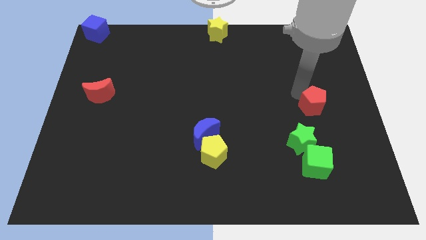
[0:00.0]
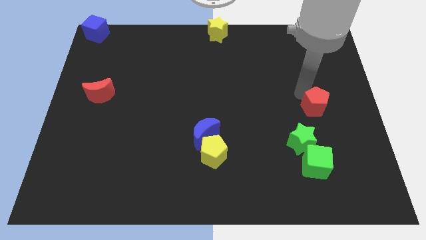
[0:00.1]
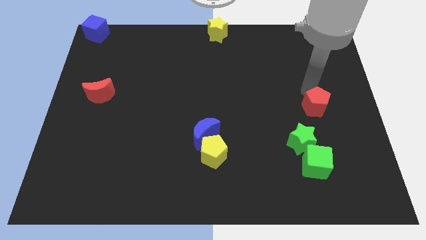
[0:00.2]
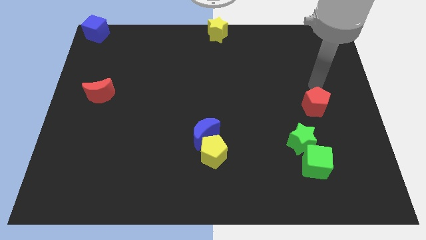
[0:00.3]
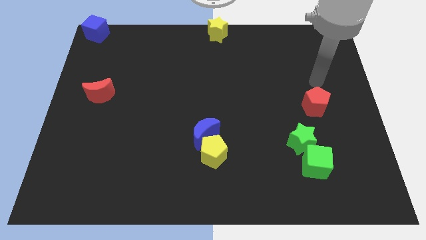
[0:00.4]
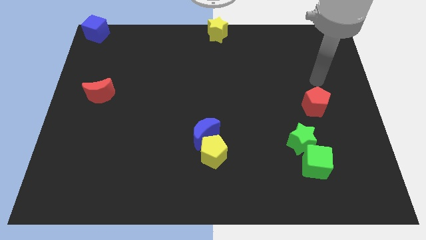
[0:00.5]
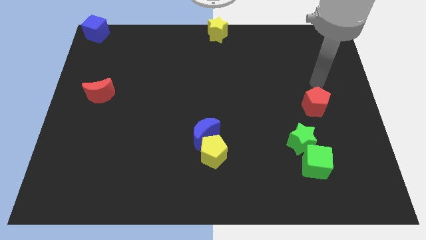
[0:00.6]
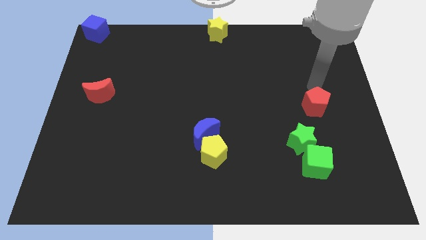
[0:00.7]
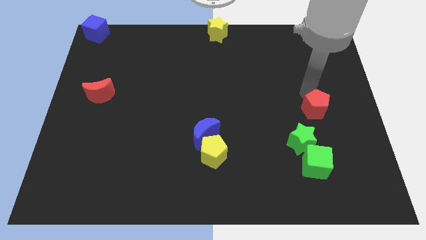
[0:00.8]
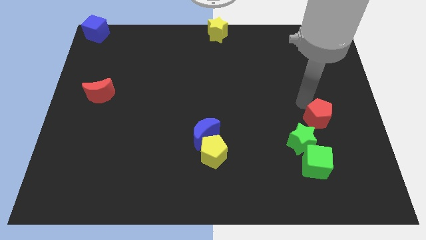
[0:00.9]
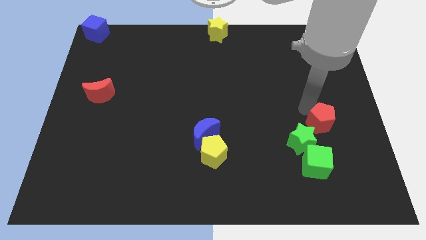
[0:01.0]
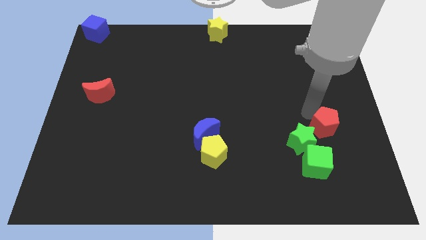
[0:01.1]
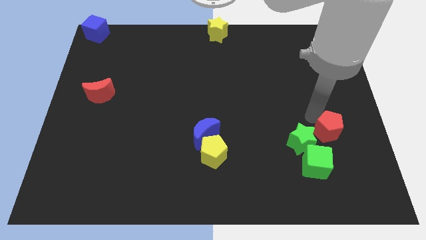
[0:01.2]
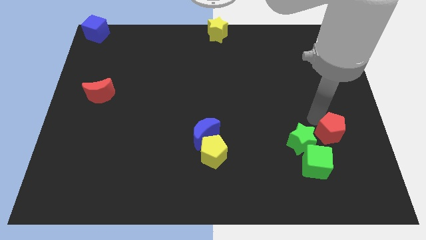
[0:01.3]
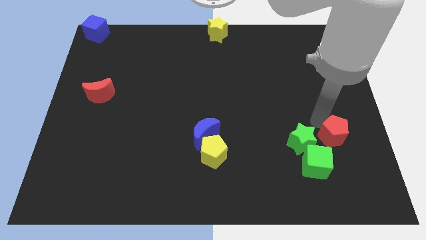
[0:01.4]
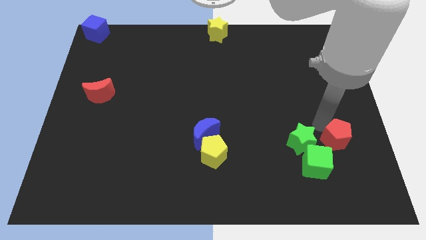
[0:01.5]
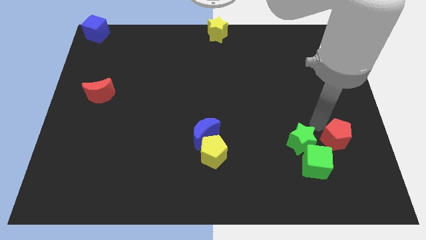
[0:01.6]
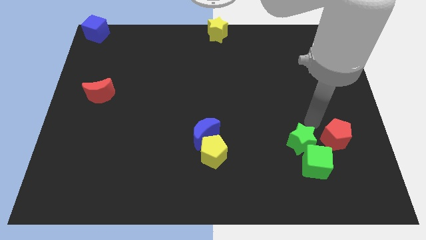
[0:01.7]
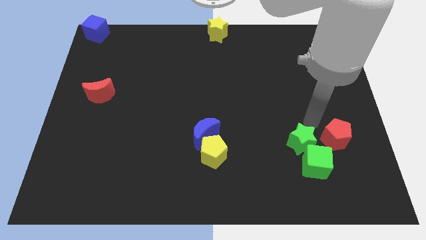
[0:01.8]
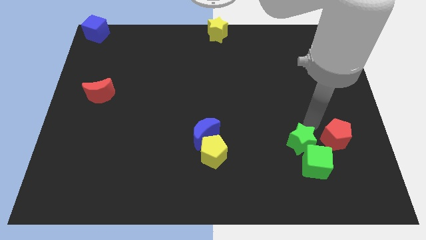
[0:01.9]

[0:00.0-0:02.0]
move the red pentagon towards green cube

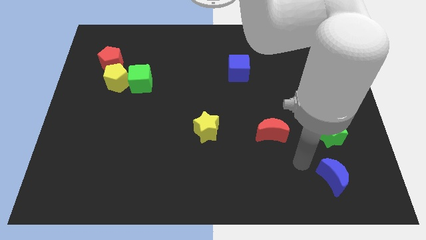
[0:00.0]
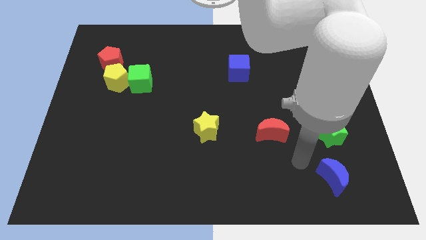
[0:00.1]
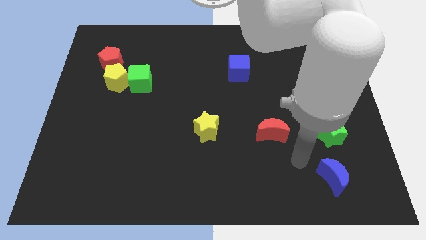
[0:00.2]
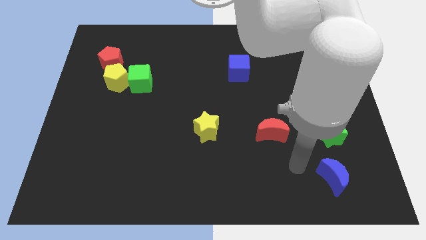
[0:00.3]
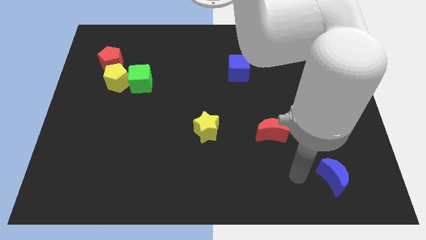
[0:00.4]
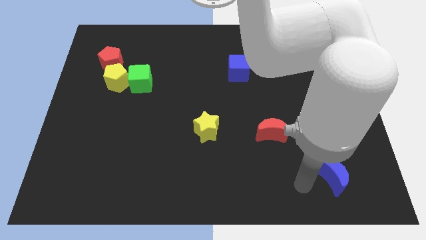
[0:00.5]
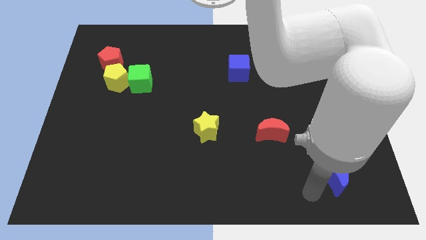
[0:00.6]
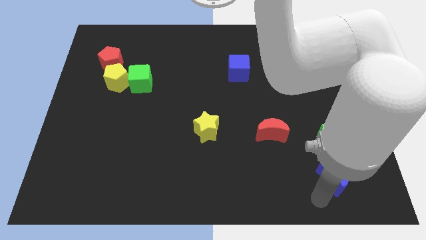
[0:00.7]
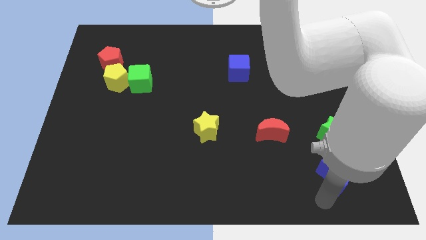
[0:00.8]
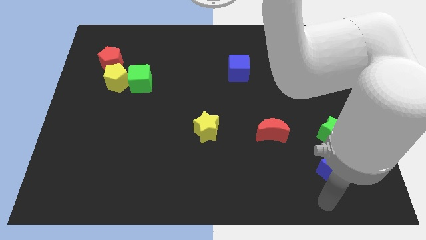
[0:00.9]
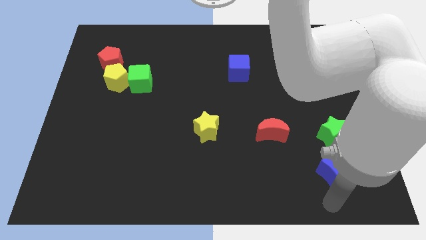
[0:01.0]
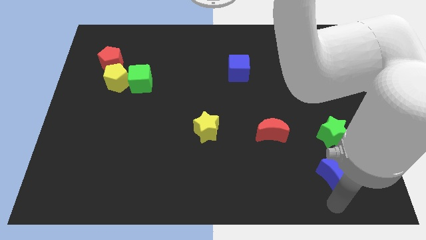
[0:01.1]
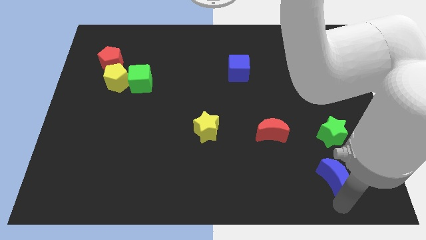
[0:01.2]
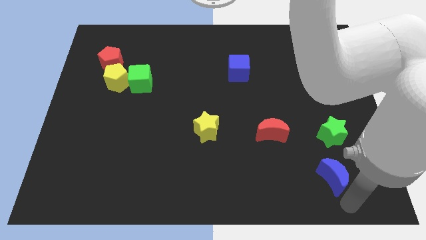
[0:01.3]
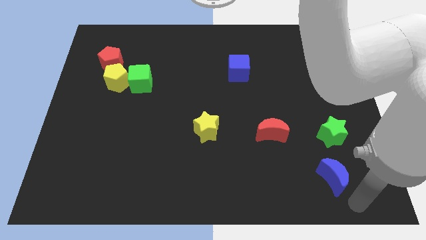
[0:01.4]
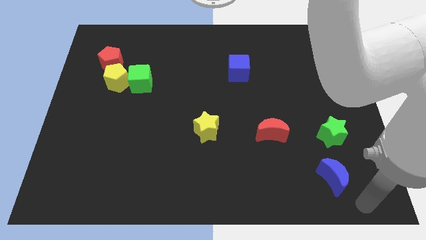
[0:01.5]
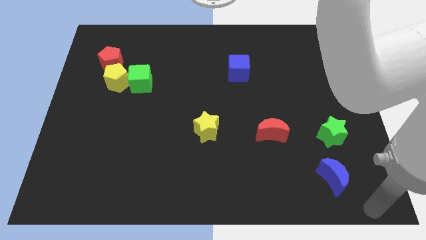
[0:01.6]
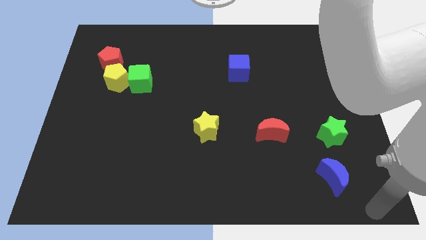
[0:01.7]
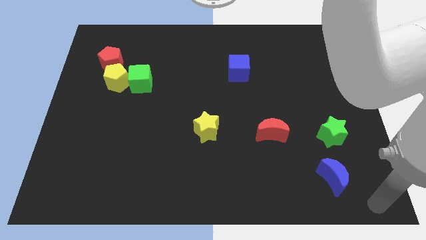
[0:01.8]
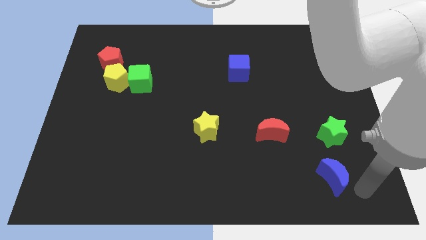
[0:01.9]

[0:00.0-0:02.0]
move your arm to the left of blue crescent

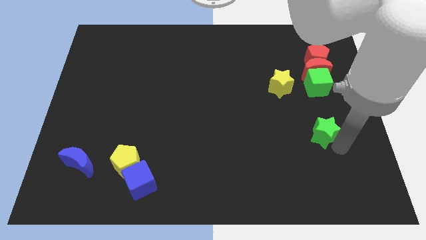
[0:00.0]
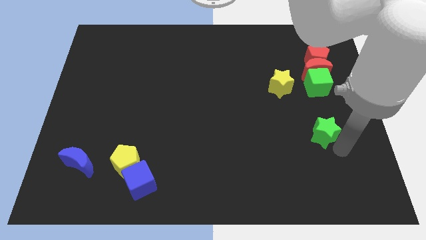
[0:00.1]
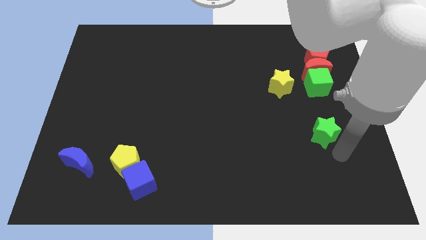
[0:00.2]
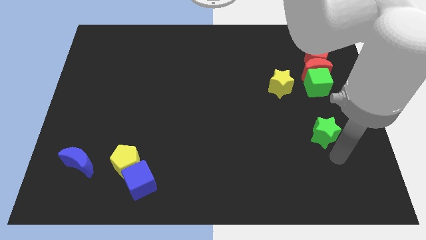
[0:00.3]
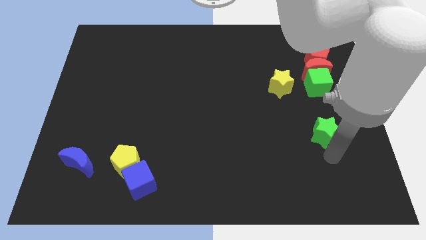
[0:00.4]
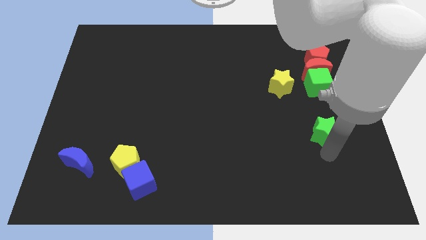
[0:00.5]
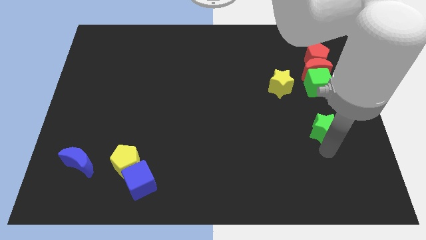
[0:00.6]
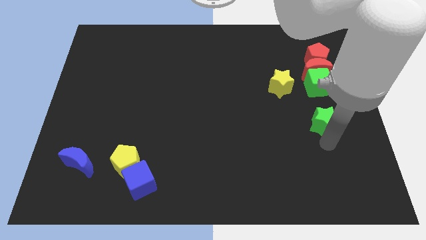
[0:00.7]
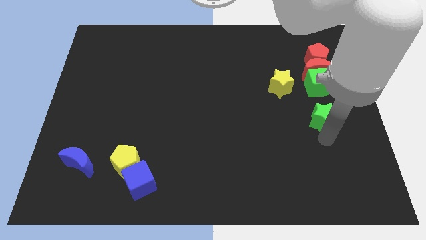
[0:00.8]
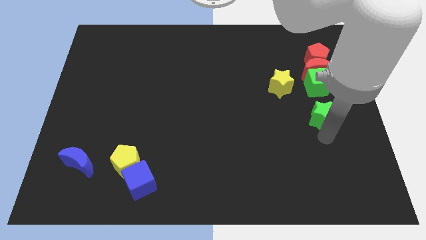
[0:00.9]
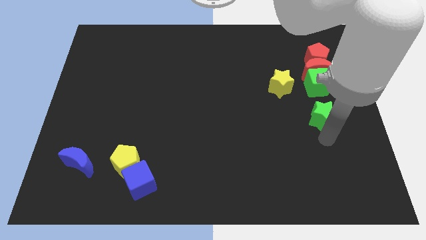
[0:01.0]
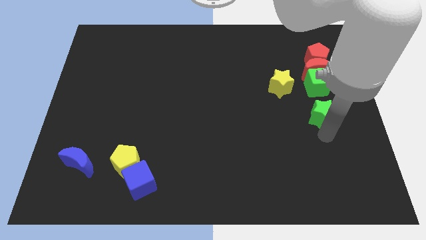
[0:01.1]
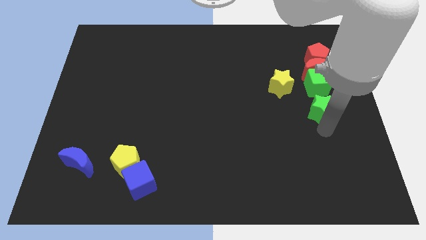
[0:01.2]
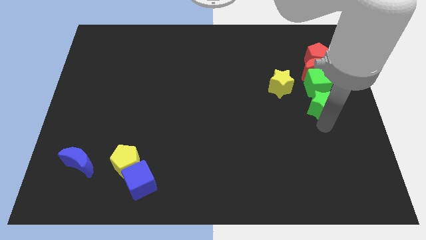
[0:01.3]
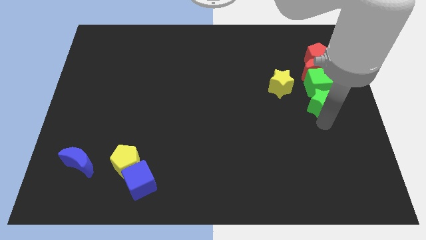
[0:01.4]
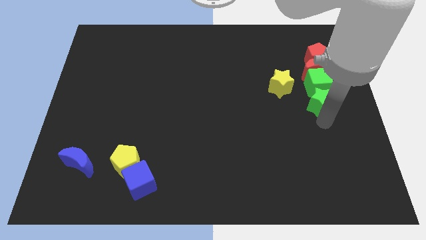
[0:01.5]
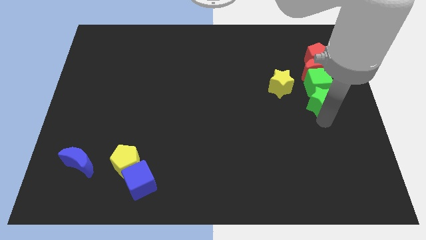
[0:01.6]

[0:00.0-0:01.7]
push the green star into the green cube

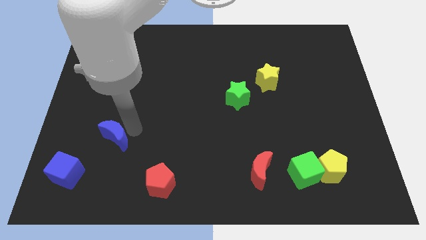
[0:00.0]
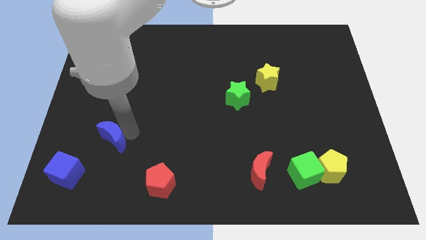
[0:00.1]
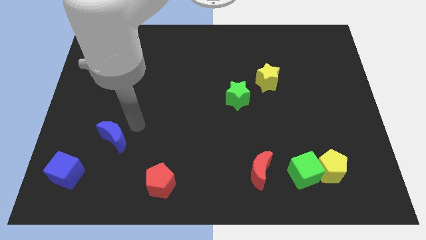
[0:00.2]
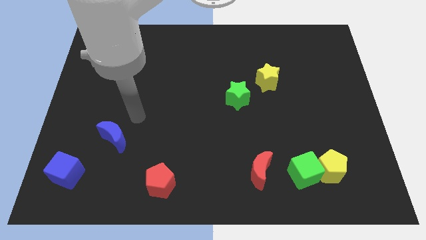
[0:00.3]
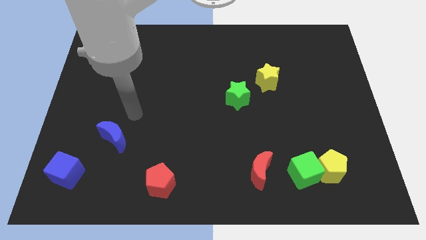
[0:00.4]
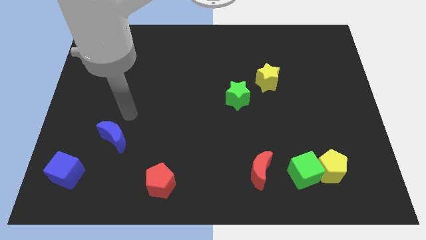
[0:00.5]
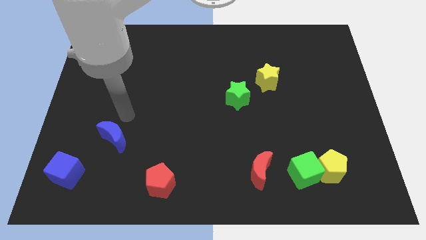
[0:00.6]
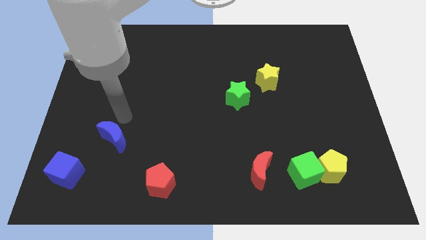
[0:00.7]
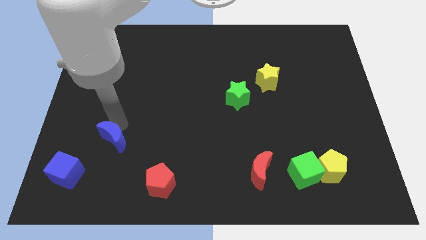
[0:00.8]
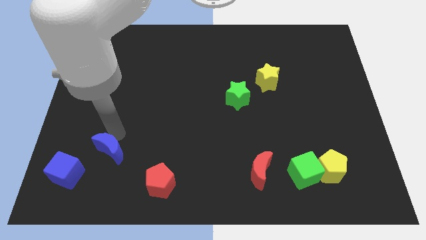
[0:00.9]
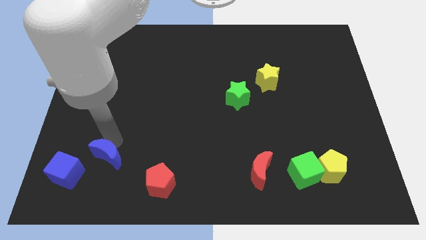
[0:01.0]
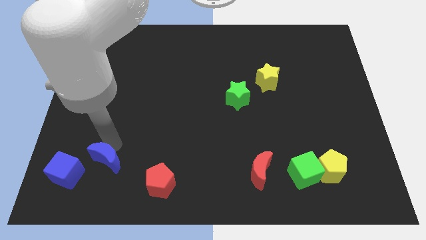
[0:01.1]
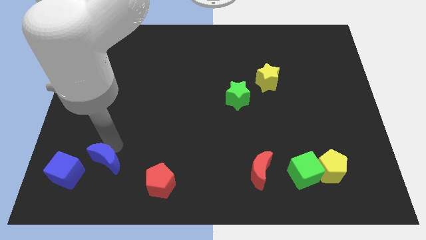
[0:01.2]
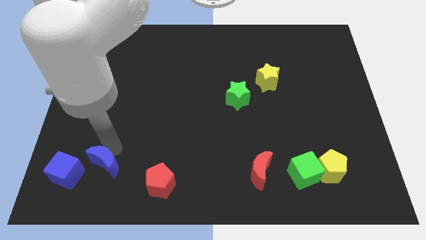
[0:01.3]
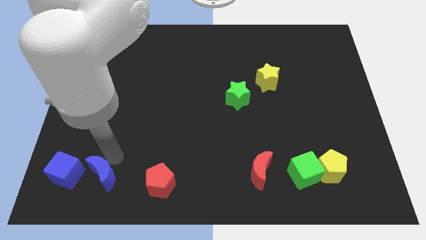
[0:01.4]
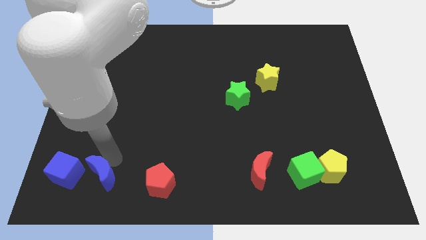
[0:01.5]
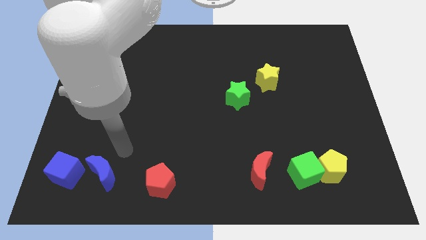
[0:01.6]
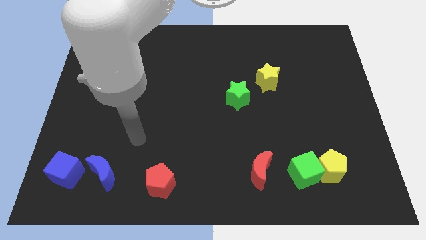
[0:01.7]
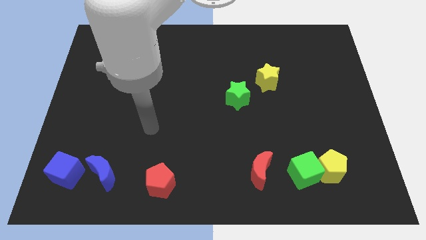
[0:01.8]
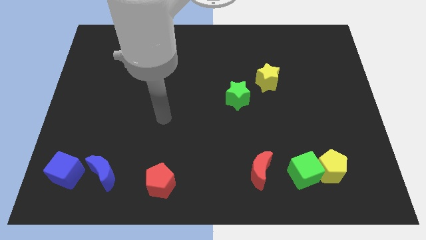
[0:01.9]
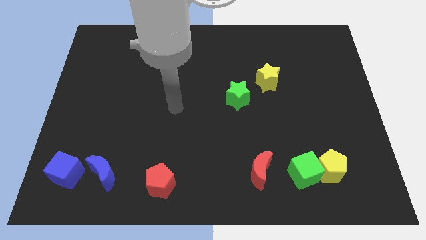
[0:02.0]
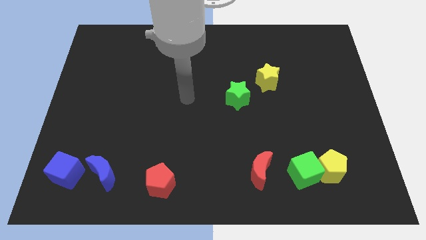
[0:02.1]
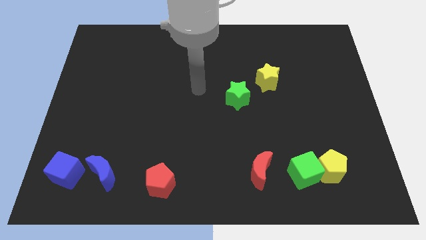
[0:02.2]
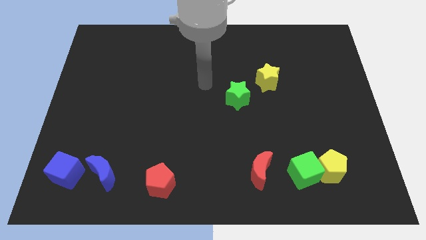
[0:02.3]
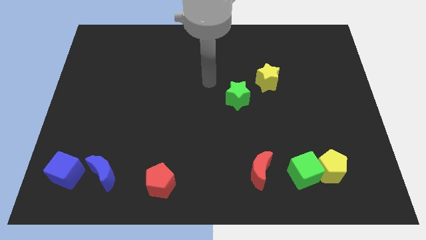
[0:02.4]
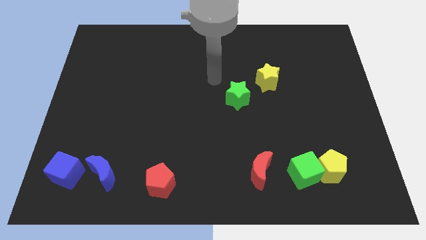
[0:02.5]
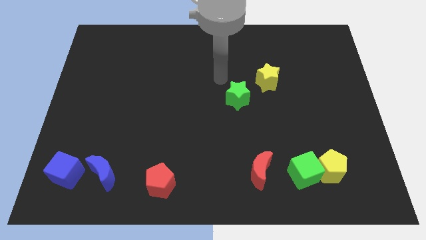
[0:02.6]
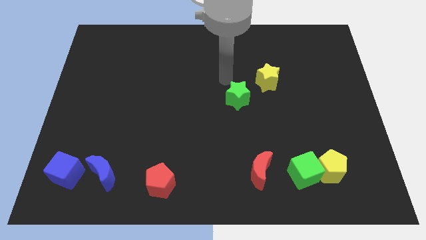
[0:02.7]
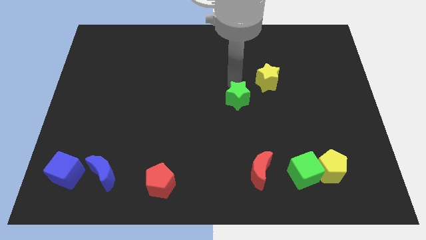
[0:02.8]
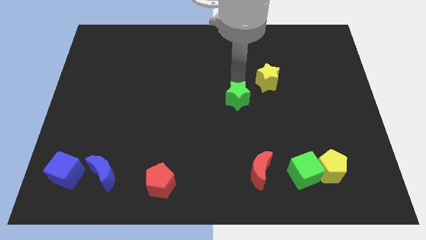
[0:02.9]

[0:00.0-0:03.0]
place the arm above the green star

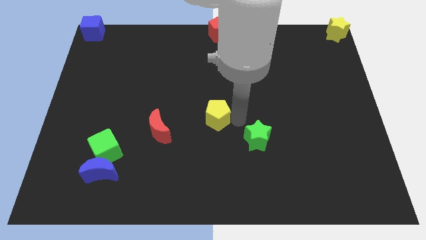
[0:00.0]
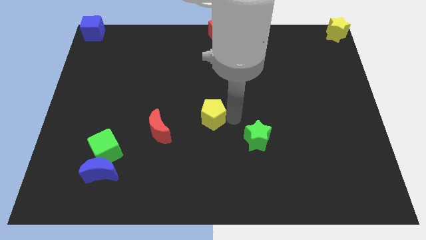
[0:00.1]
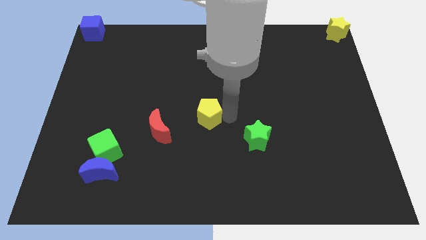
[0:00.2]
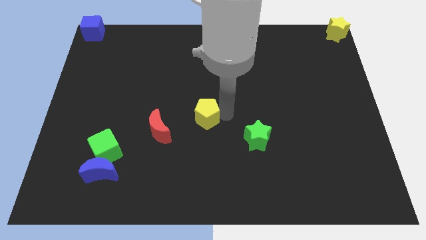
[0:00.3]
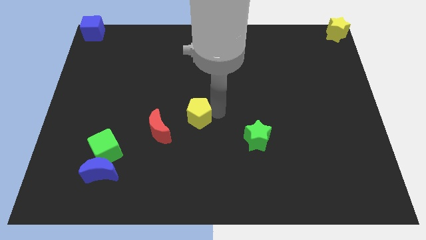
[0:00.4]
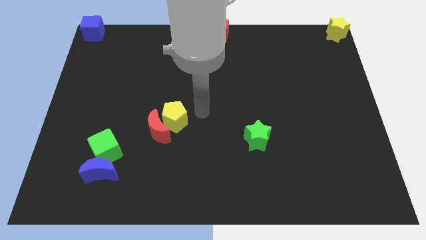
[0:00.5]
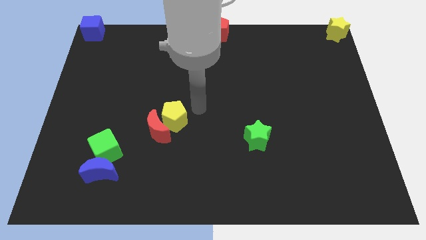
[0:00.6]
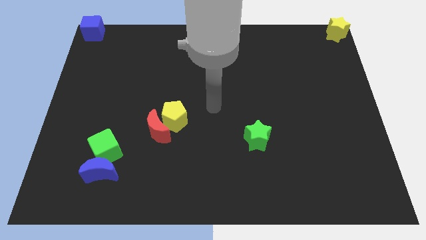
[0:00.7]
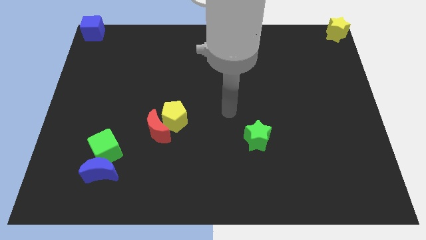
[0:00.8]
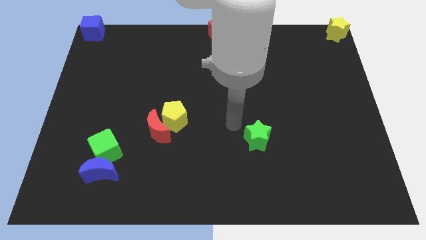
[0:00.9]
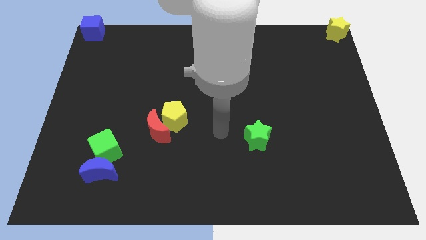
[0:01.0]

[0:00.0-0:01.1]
push the yellow pentagon into the red crescent
